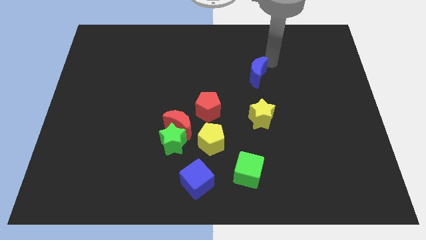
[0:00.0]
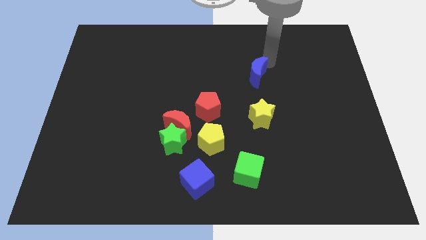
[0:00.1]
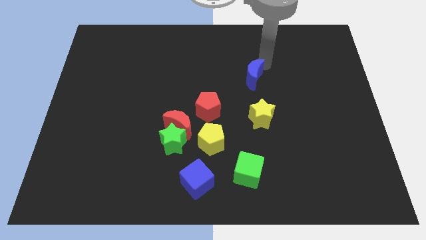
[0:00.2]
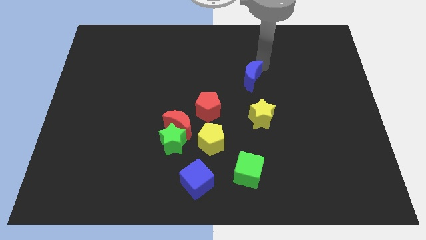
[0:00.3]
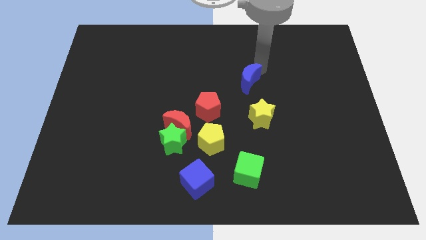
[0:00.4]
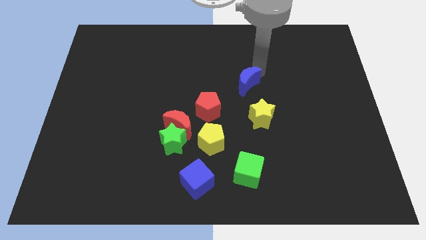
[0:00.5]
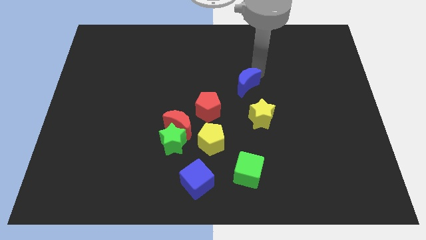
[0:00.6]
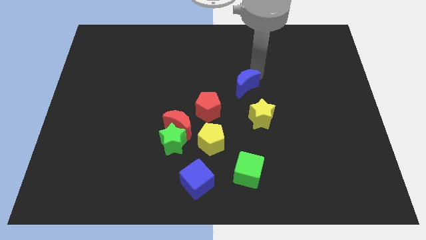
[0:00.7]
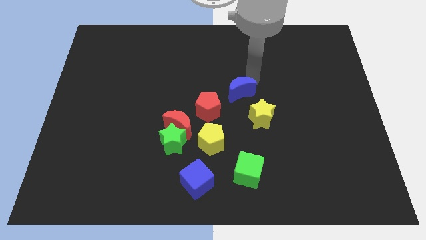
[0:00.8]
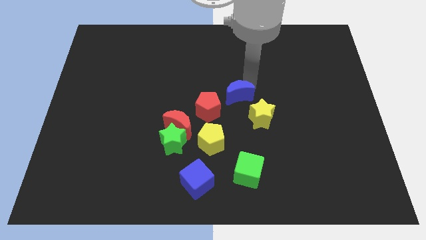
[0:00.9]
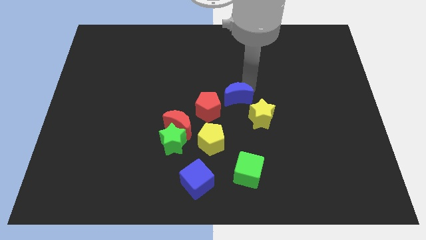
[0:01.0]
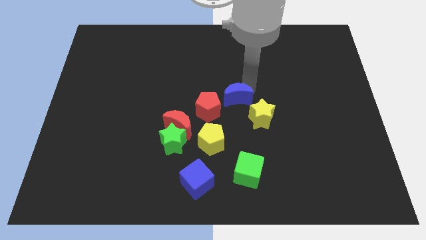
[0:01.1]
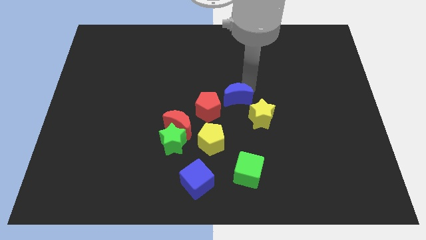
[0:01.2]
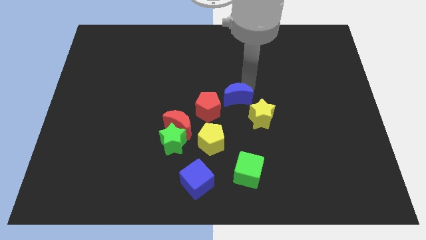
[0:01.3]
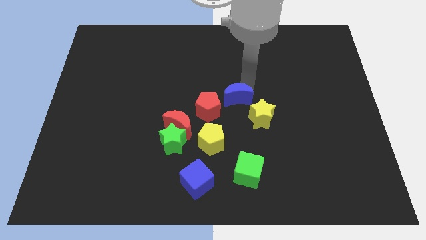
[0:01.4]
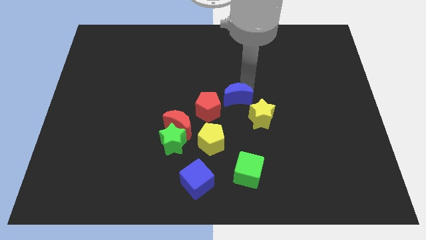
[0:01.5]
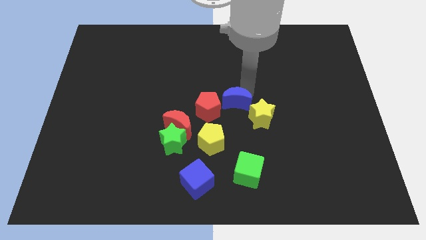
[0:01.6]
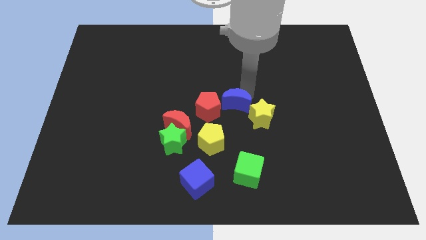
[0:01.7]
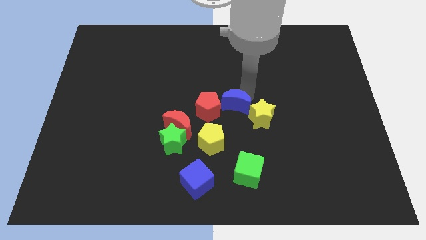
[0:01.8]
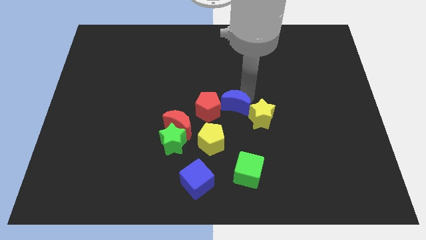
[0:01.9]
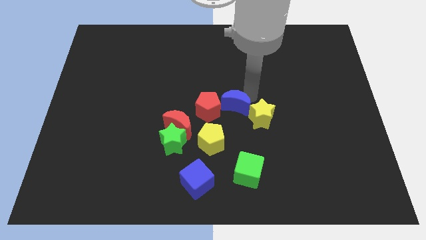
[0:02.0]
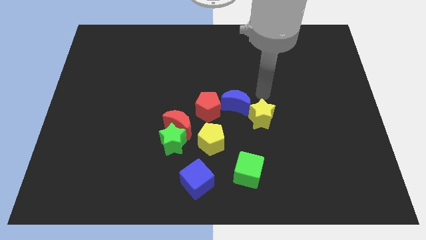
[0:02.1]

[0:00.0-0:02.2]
place the blue moon in between the yellow star and red pentagon

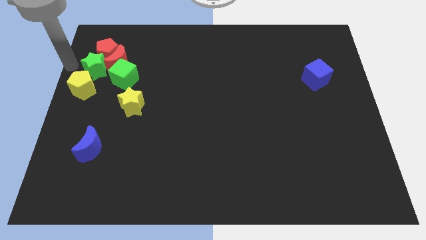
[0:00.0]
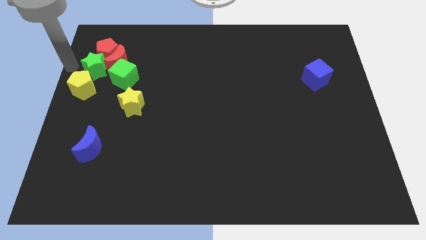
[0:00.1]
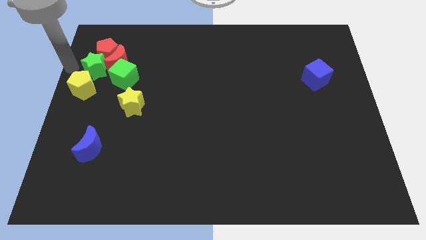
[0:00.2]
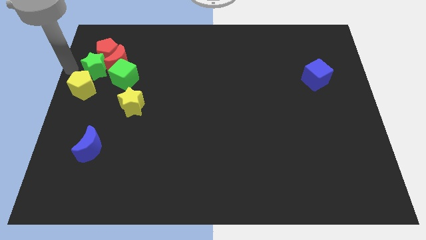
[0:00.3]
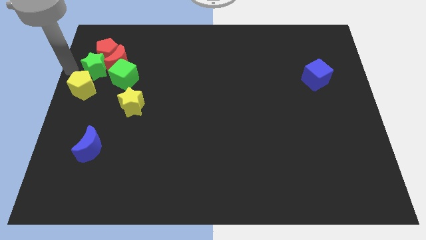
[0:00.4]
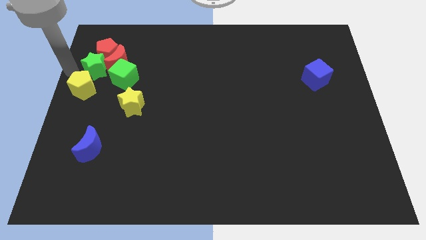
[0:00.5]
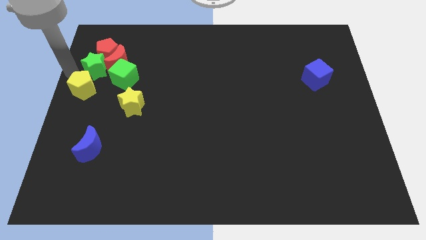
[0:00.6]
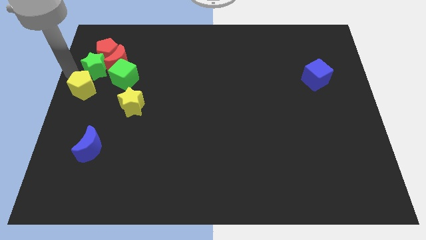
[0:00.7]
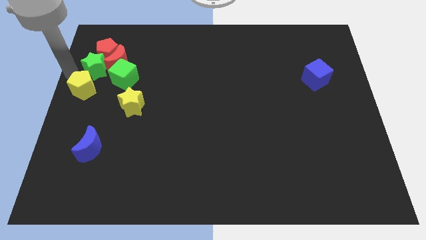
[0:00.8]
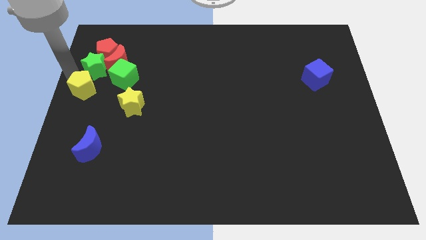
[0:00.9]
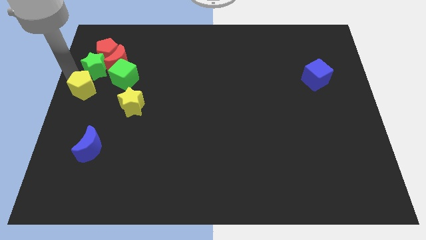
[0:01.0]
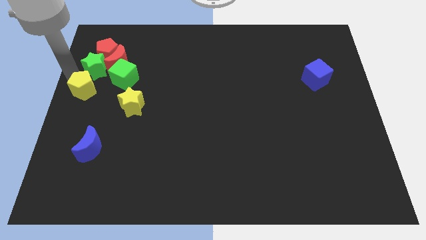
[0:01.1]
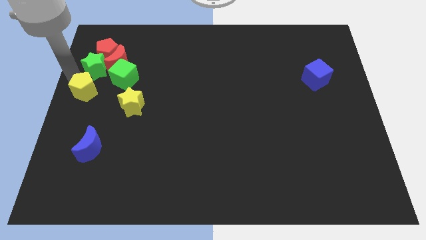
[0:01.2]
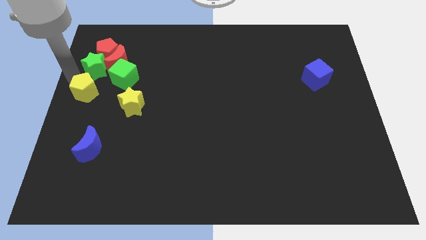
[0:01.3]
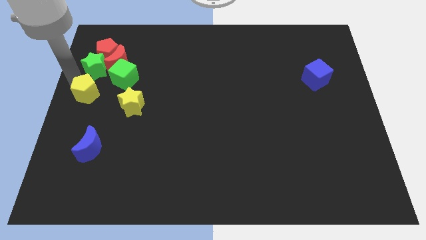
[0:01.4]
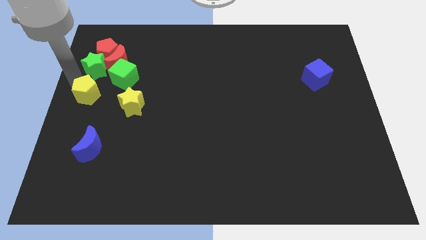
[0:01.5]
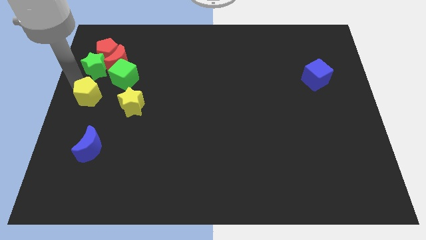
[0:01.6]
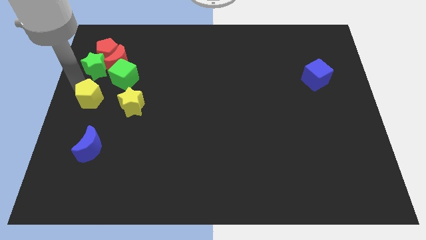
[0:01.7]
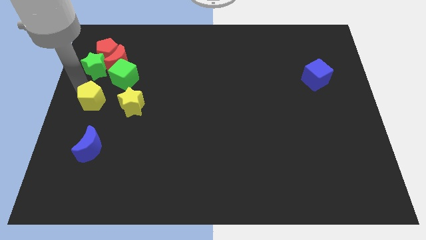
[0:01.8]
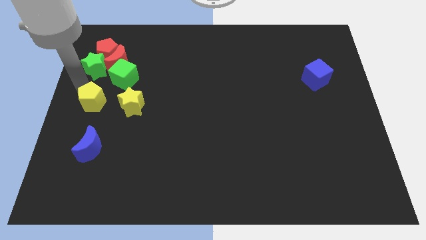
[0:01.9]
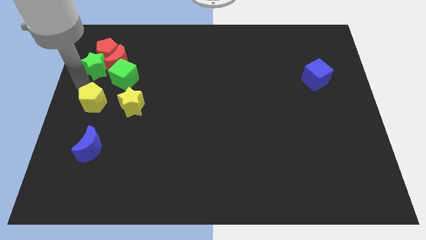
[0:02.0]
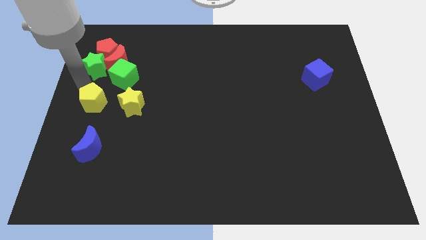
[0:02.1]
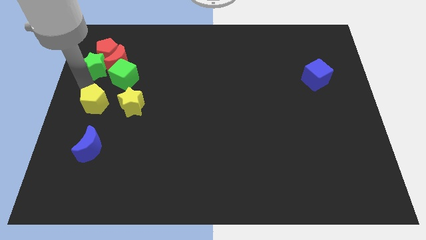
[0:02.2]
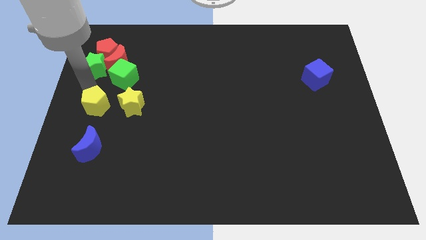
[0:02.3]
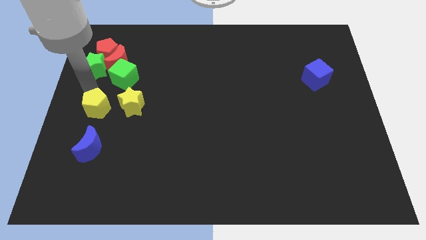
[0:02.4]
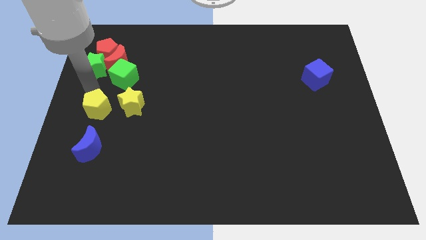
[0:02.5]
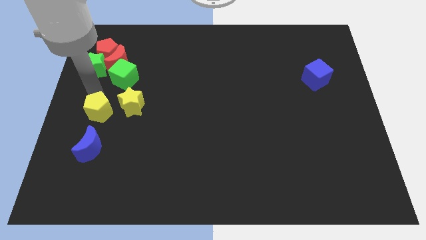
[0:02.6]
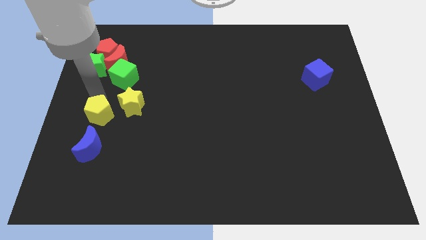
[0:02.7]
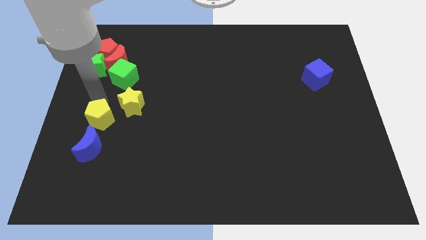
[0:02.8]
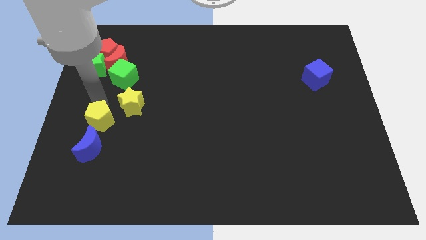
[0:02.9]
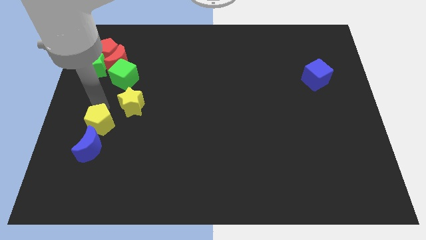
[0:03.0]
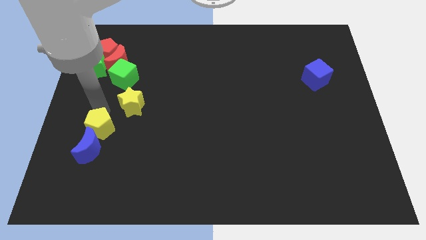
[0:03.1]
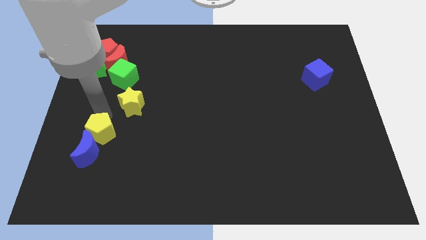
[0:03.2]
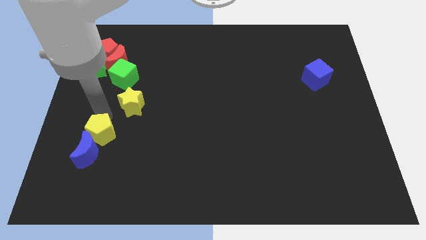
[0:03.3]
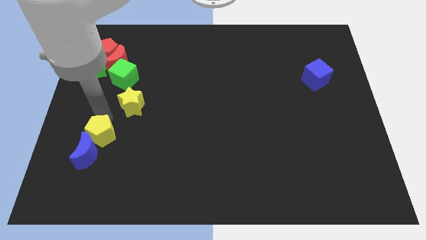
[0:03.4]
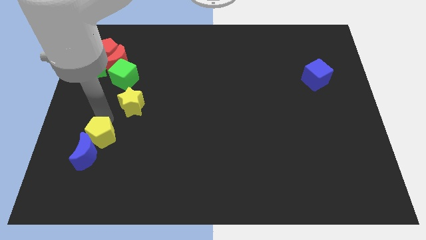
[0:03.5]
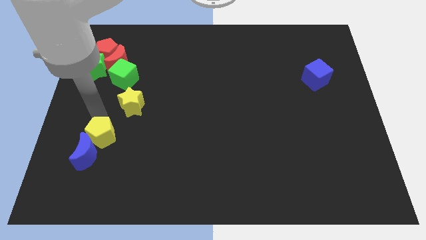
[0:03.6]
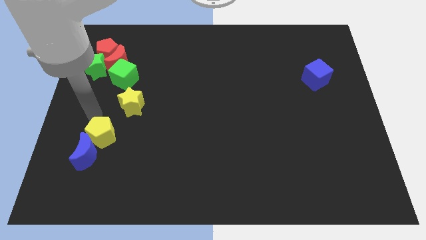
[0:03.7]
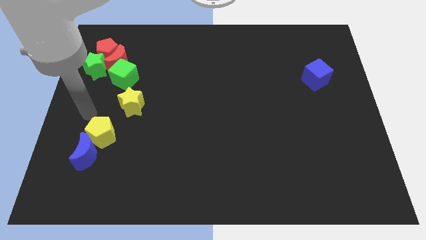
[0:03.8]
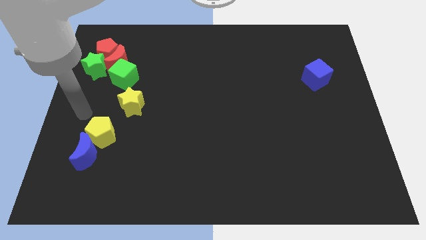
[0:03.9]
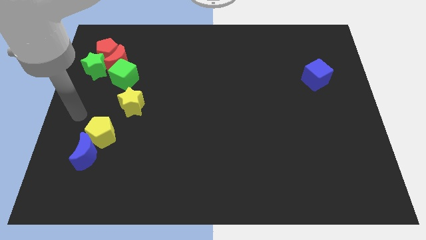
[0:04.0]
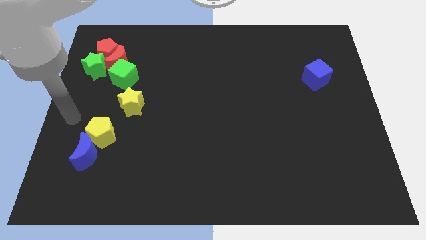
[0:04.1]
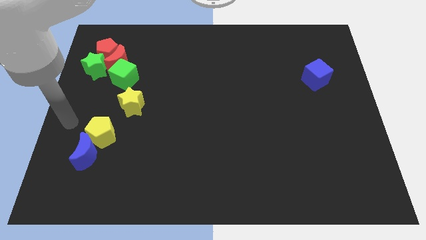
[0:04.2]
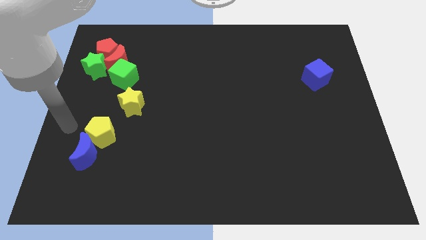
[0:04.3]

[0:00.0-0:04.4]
push the yellow pentagon towards the blue crescent

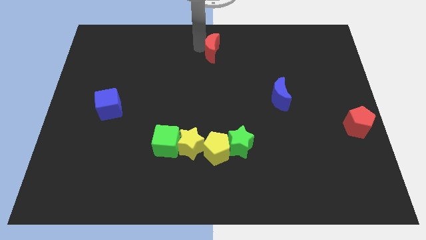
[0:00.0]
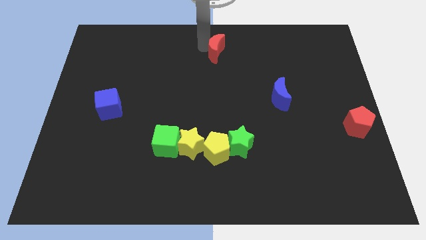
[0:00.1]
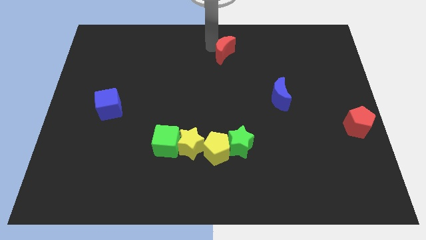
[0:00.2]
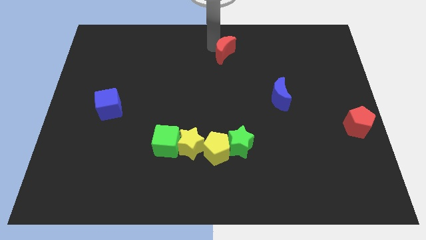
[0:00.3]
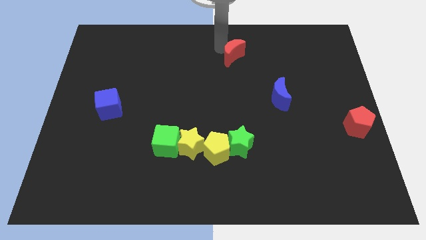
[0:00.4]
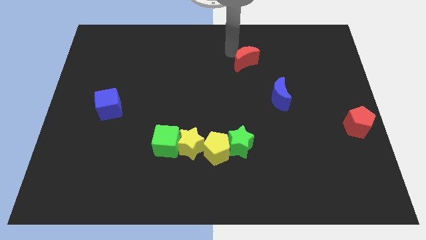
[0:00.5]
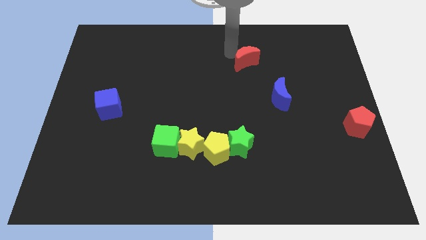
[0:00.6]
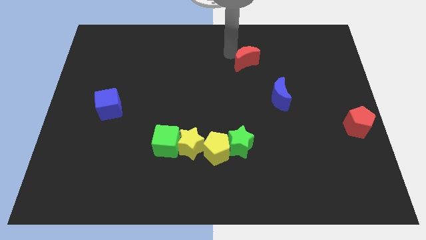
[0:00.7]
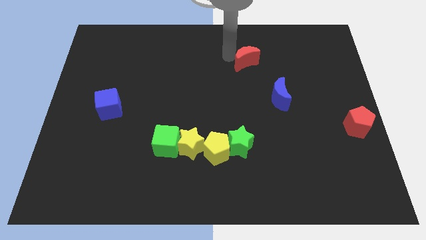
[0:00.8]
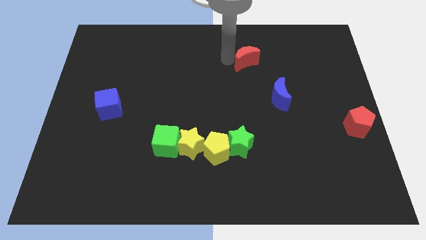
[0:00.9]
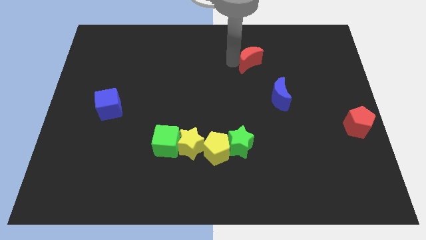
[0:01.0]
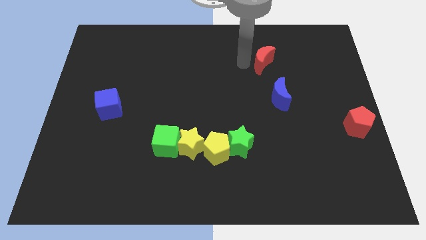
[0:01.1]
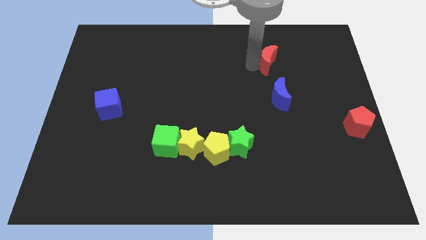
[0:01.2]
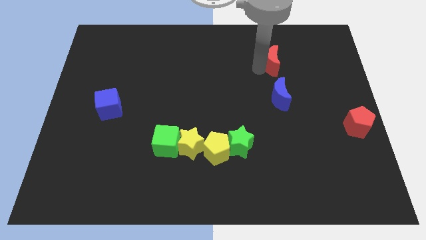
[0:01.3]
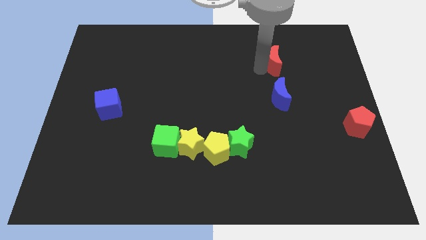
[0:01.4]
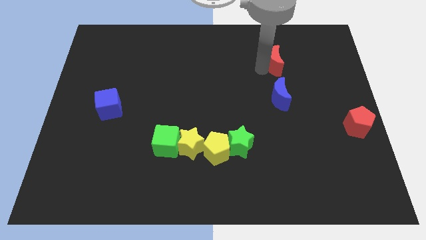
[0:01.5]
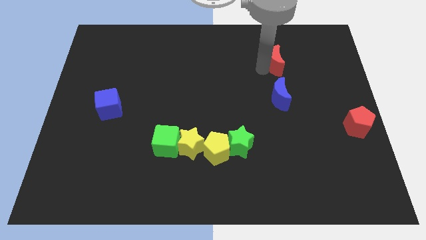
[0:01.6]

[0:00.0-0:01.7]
place the red moon above the blue moon

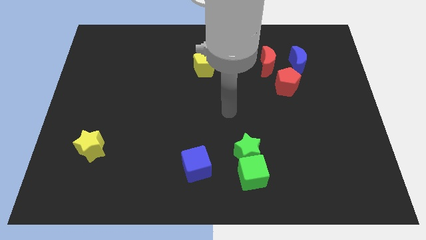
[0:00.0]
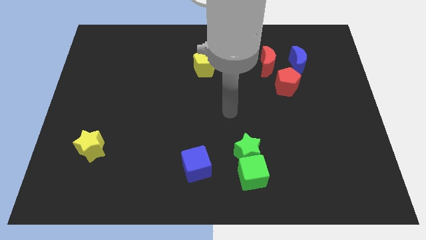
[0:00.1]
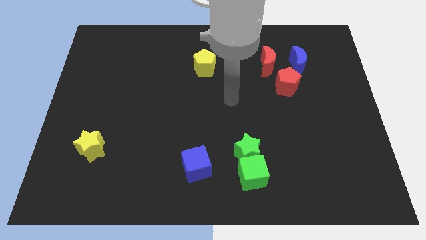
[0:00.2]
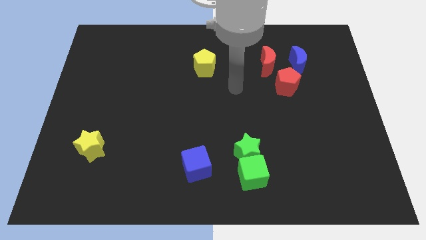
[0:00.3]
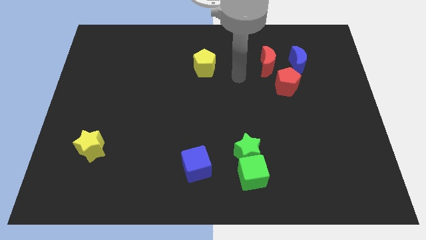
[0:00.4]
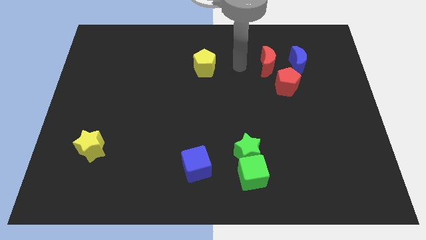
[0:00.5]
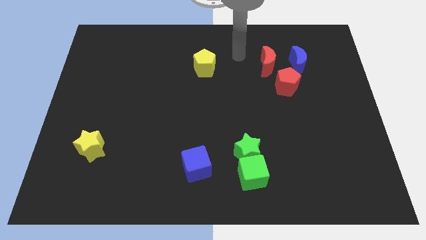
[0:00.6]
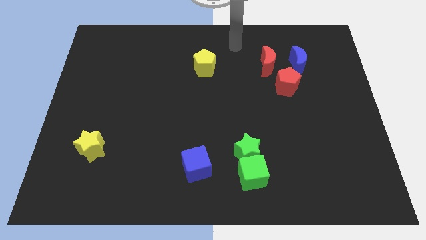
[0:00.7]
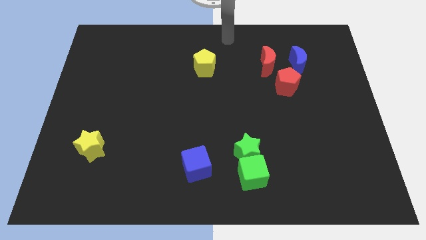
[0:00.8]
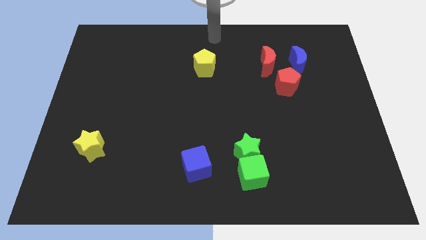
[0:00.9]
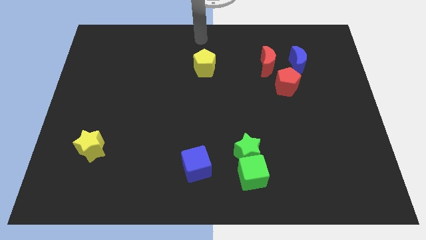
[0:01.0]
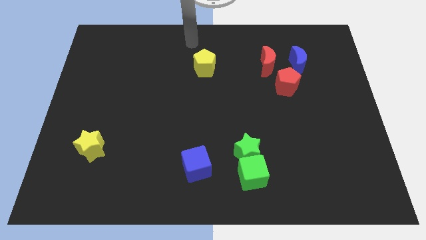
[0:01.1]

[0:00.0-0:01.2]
place your arm to the top of the yellow pentagon
